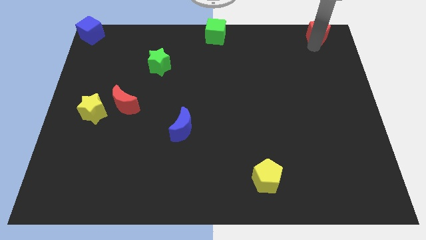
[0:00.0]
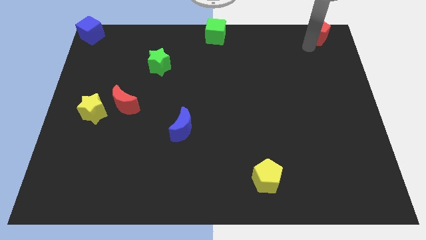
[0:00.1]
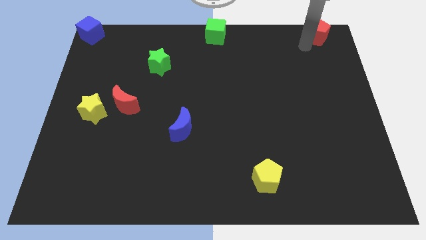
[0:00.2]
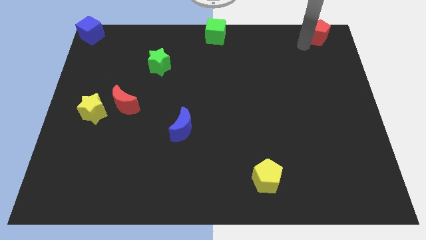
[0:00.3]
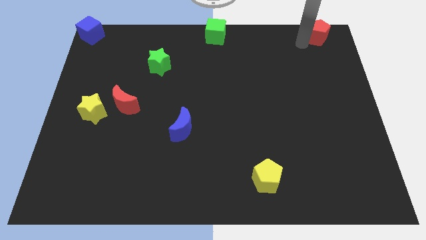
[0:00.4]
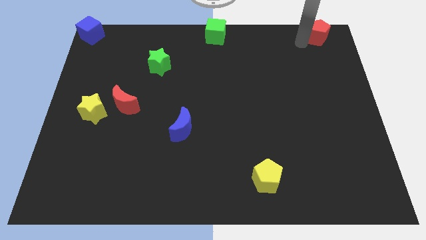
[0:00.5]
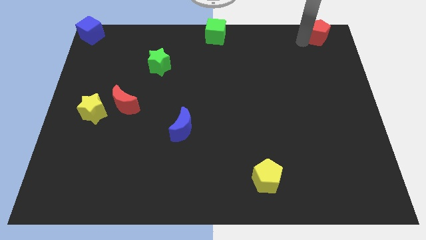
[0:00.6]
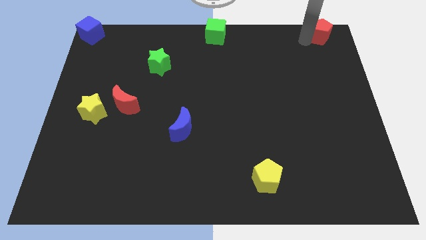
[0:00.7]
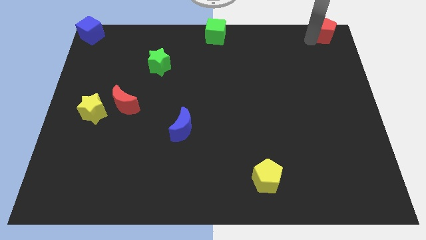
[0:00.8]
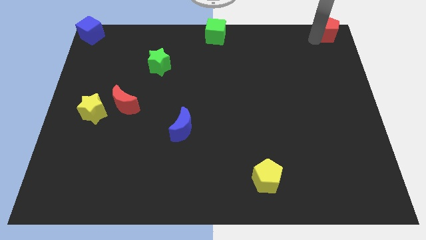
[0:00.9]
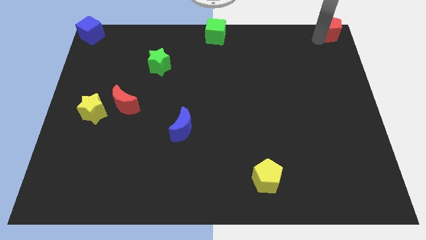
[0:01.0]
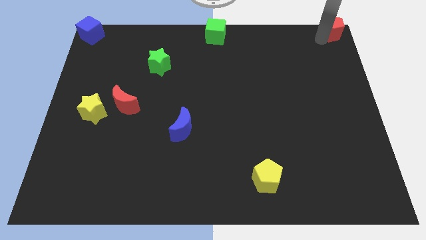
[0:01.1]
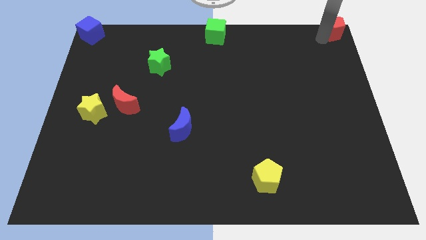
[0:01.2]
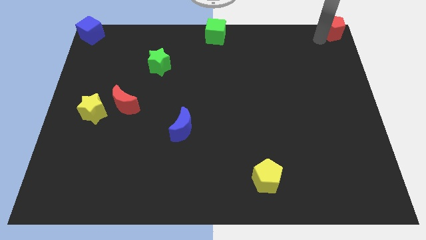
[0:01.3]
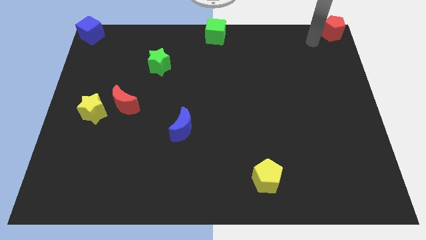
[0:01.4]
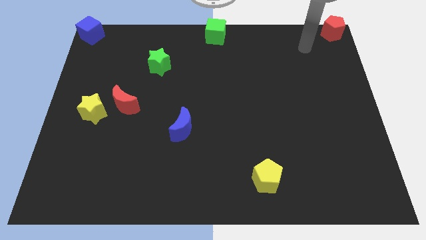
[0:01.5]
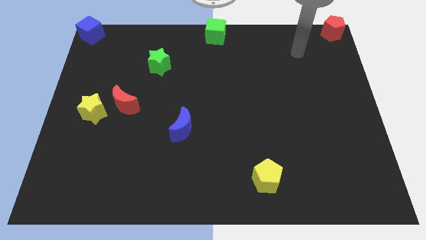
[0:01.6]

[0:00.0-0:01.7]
push the red pentagon to the top right corner of the board

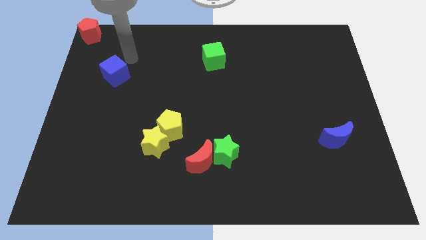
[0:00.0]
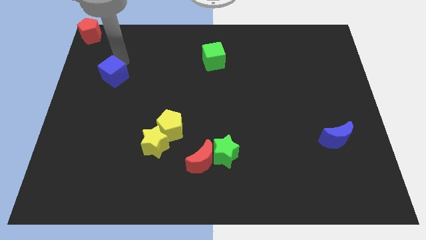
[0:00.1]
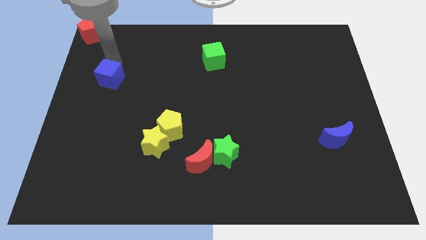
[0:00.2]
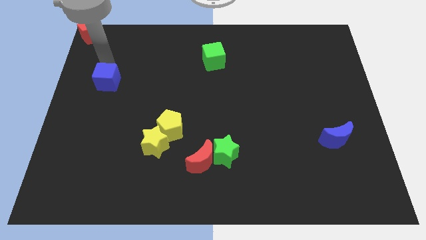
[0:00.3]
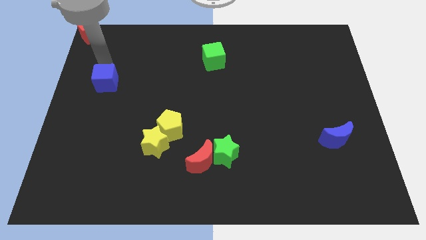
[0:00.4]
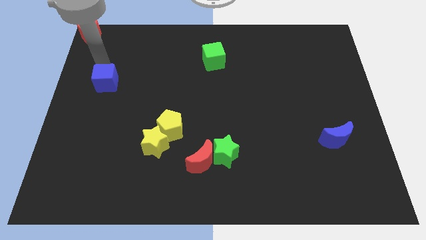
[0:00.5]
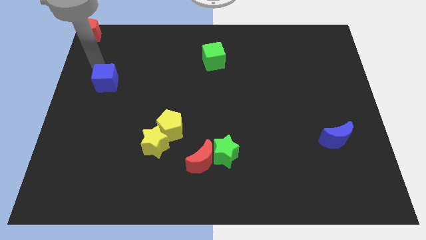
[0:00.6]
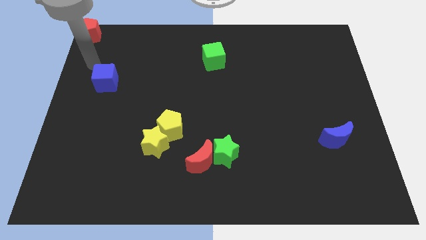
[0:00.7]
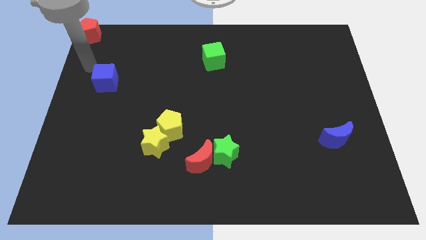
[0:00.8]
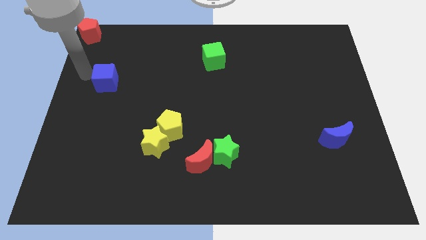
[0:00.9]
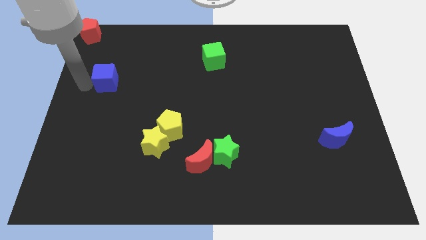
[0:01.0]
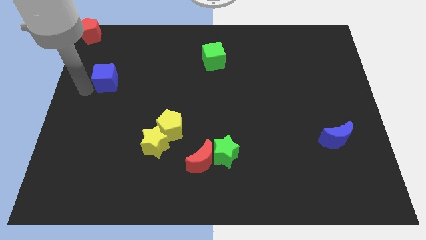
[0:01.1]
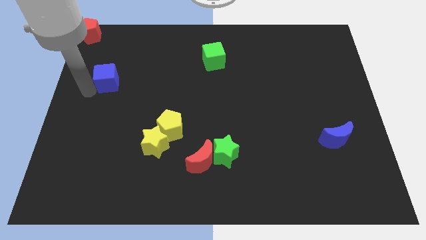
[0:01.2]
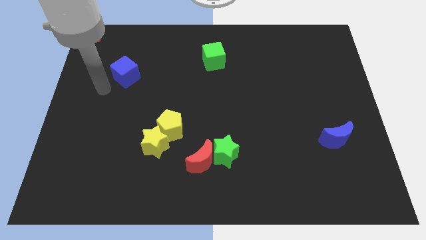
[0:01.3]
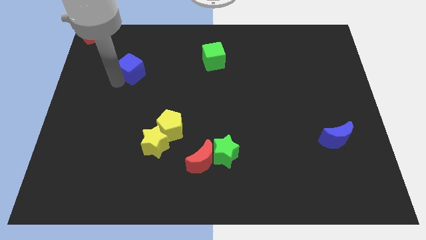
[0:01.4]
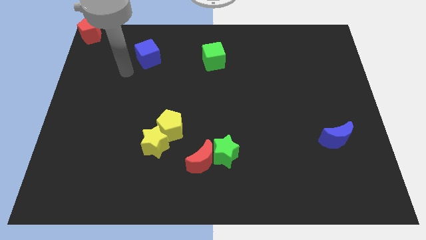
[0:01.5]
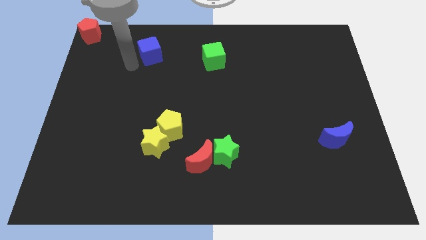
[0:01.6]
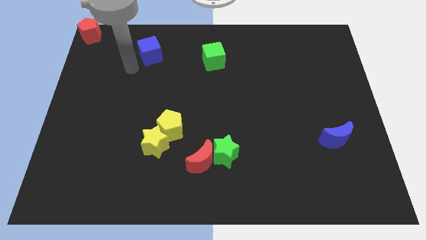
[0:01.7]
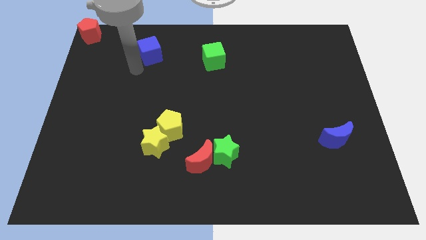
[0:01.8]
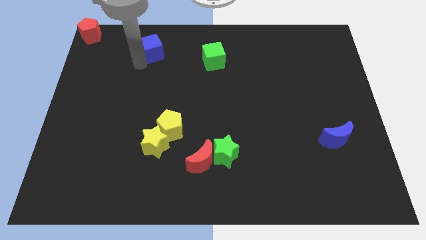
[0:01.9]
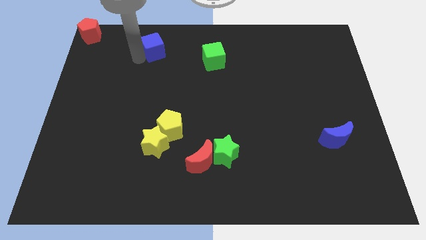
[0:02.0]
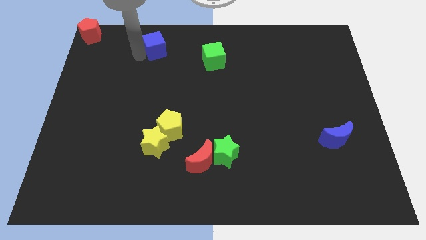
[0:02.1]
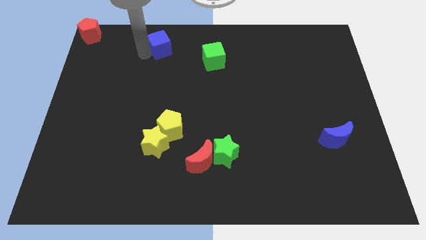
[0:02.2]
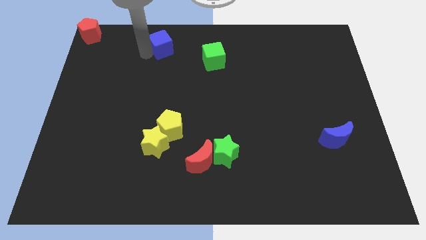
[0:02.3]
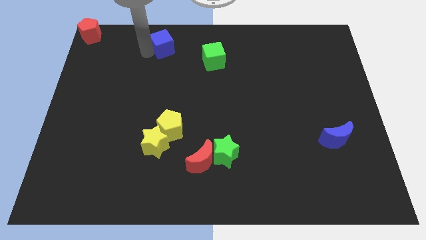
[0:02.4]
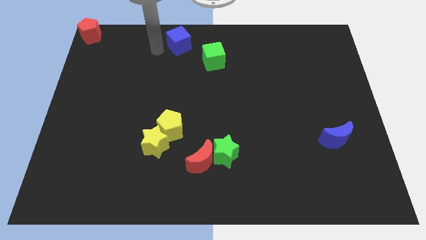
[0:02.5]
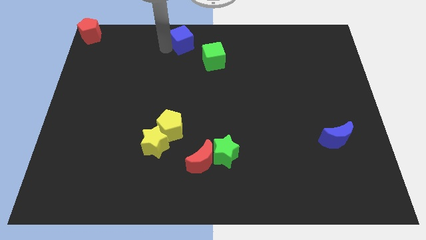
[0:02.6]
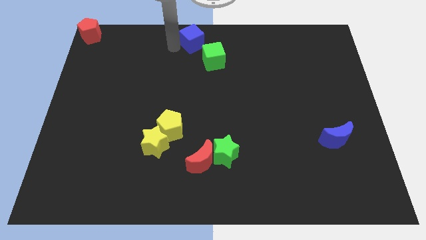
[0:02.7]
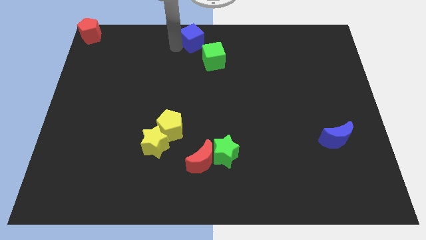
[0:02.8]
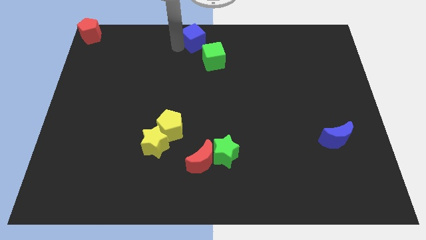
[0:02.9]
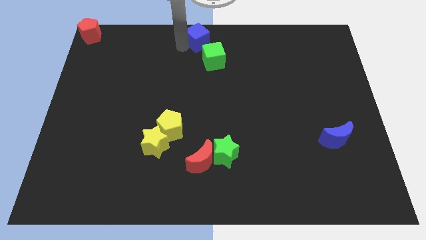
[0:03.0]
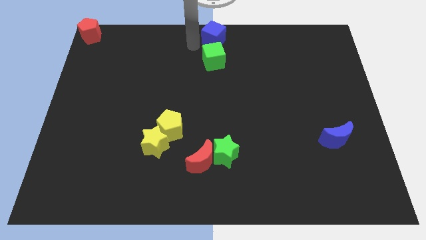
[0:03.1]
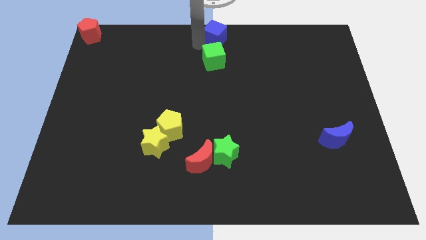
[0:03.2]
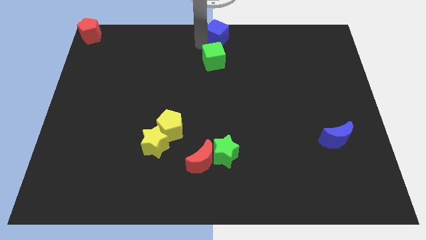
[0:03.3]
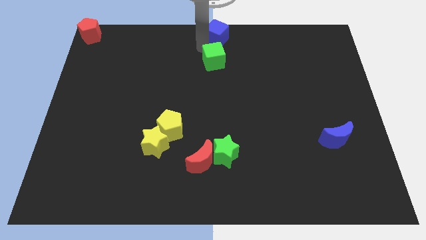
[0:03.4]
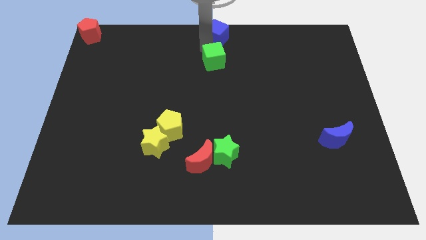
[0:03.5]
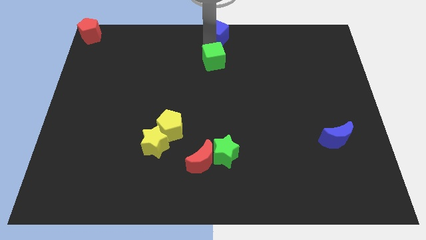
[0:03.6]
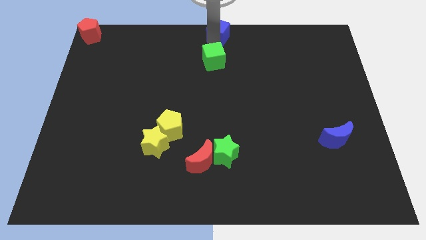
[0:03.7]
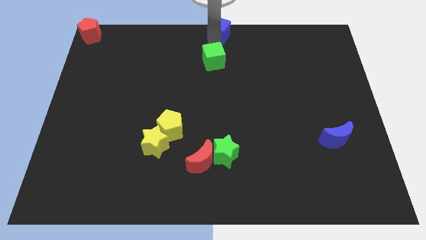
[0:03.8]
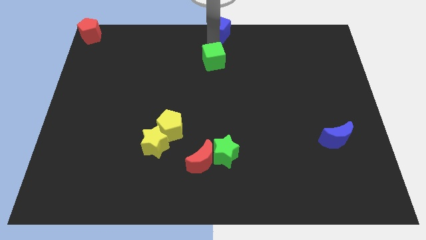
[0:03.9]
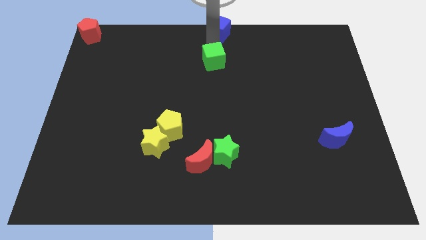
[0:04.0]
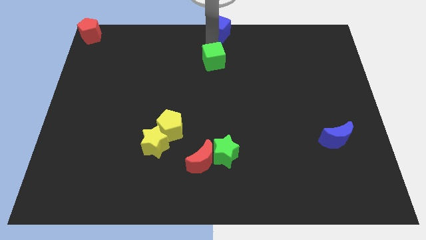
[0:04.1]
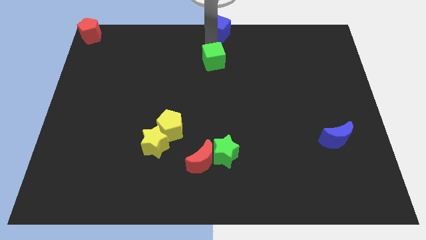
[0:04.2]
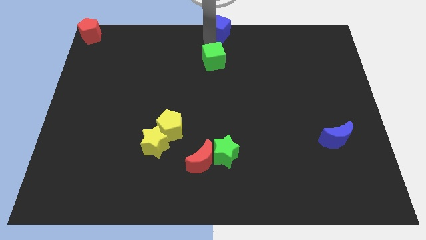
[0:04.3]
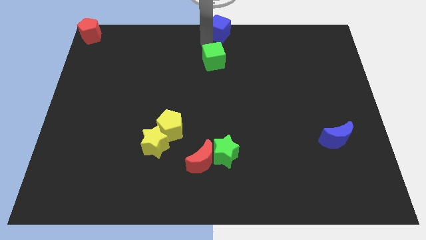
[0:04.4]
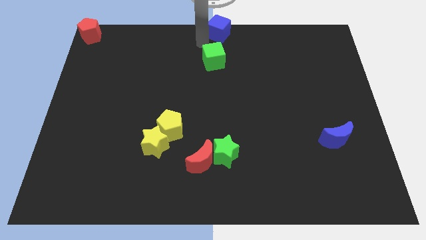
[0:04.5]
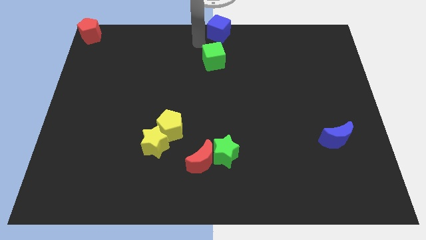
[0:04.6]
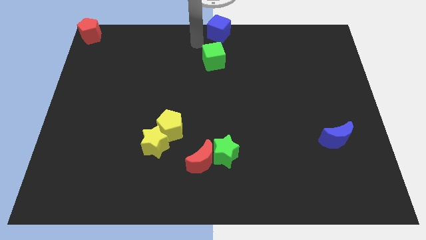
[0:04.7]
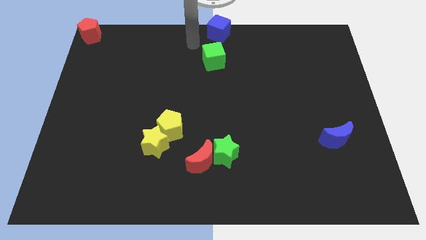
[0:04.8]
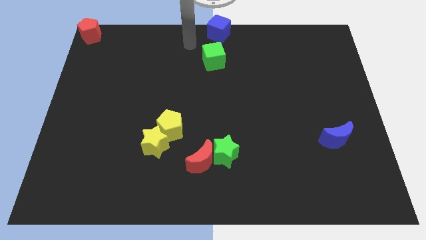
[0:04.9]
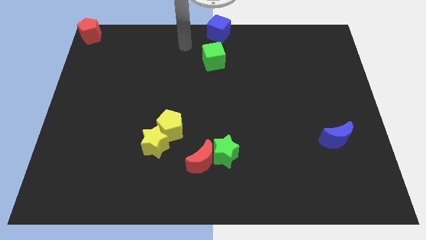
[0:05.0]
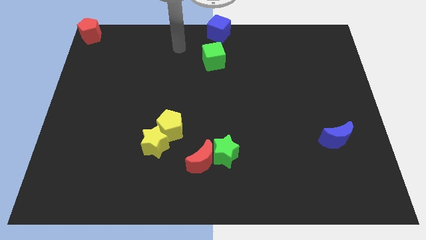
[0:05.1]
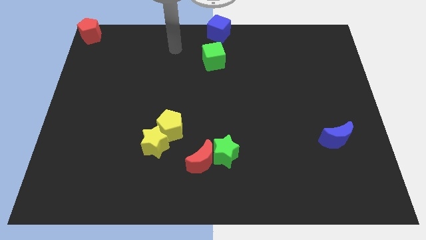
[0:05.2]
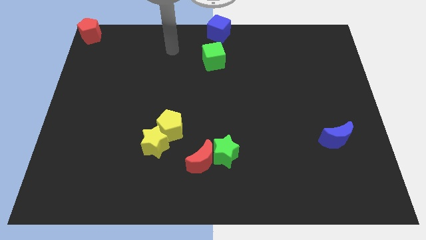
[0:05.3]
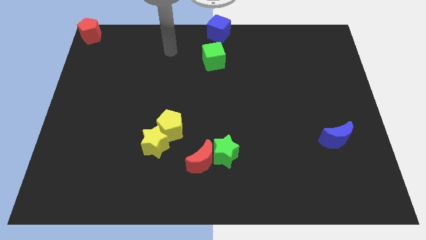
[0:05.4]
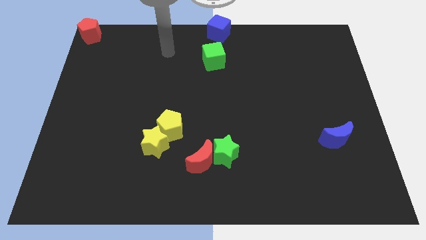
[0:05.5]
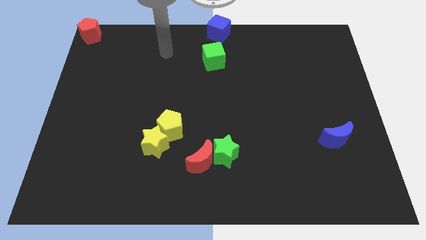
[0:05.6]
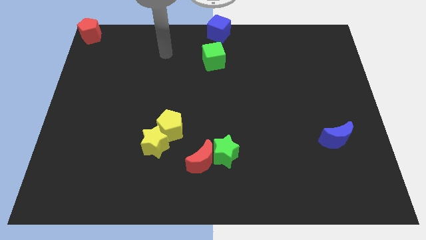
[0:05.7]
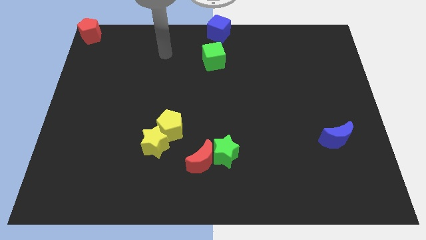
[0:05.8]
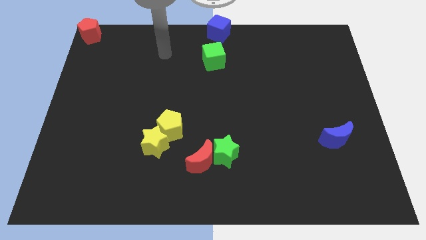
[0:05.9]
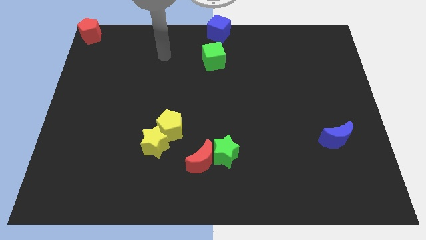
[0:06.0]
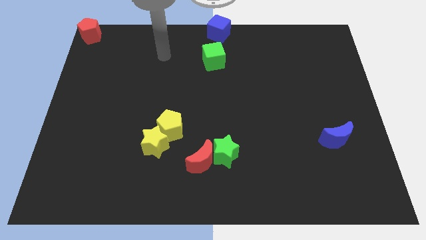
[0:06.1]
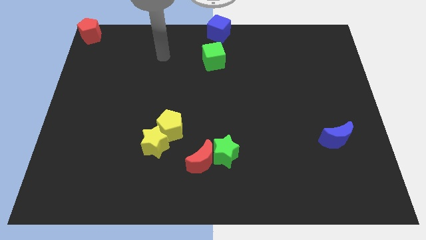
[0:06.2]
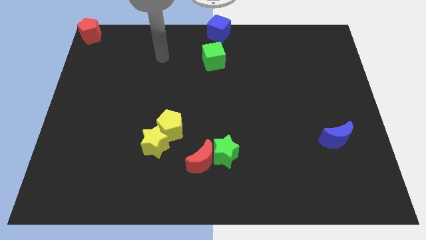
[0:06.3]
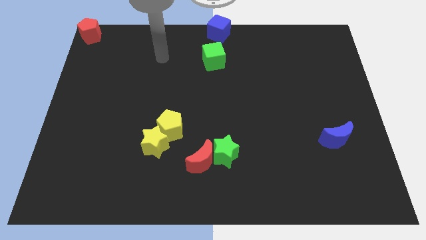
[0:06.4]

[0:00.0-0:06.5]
push the blue cube to the top center

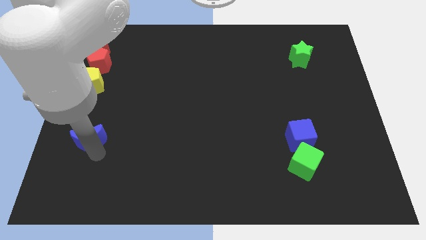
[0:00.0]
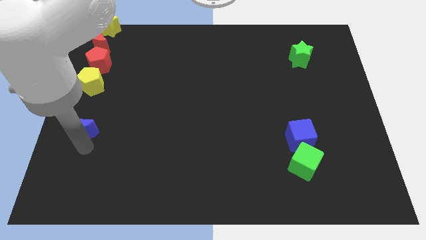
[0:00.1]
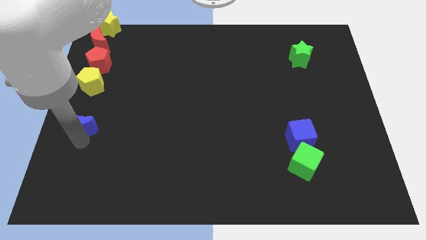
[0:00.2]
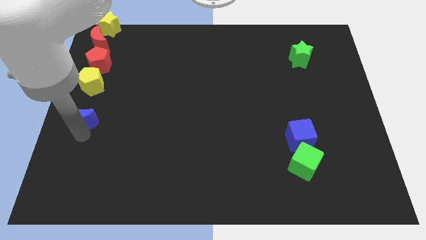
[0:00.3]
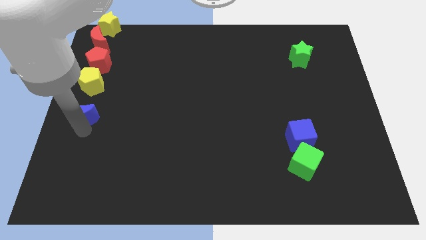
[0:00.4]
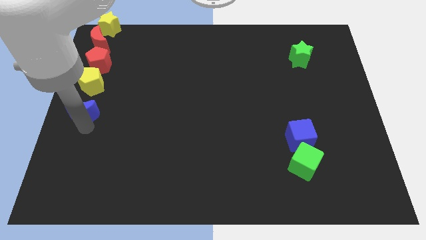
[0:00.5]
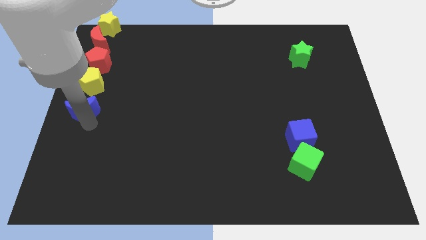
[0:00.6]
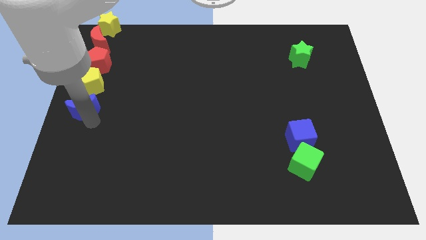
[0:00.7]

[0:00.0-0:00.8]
place blue crescent below yellow pentagon
